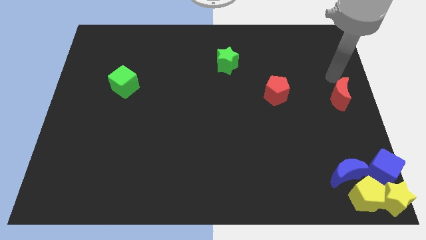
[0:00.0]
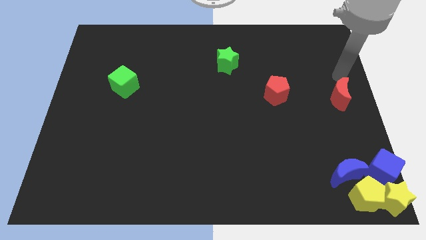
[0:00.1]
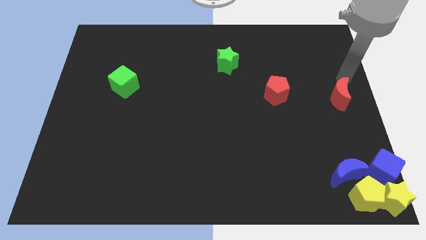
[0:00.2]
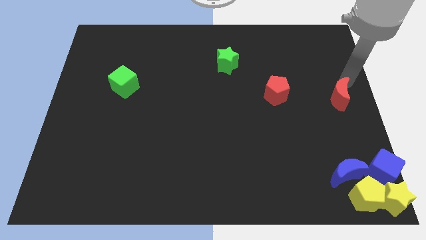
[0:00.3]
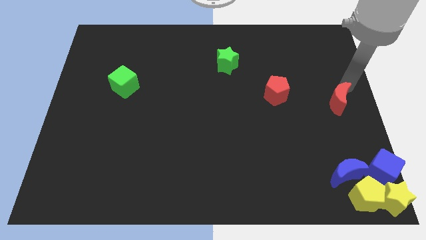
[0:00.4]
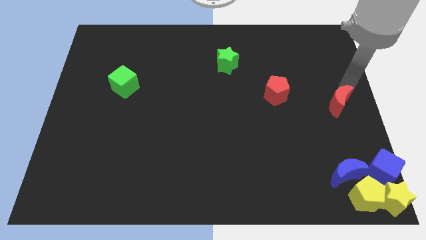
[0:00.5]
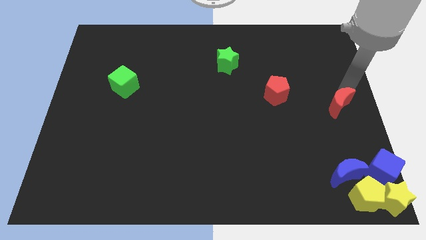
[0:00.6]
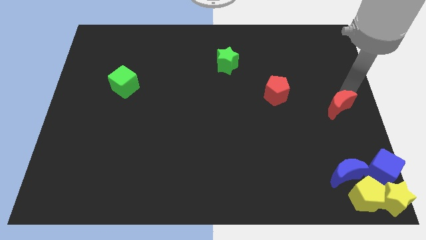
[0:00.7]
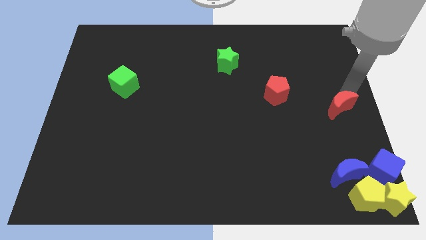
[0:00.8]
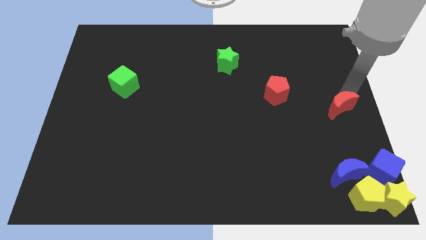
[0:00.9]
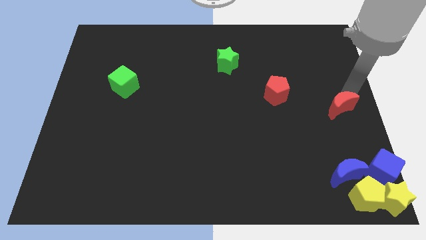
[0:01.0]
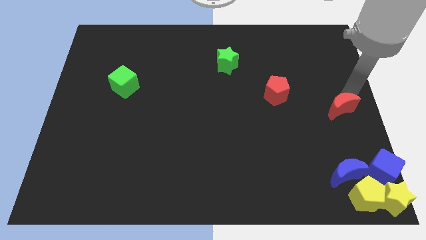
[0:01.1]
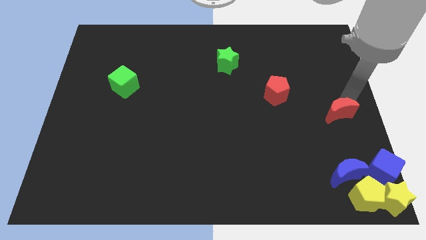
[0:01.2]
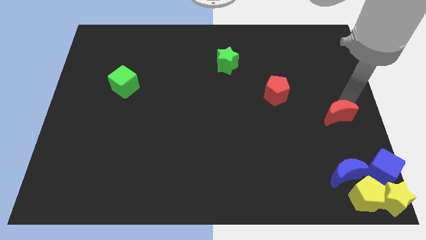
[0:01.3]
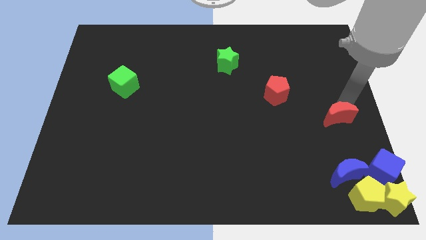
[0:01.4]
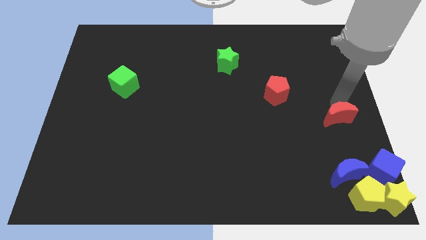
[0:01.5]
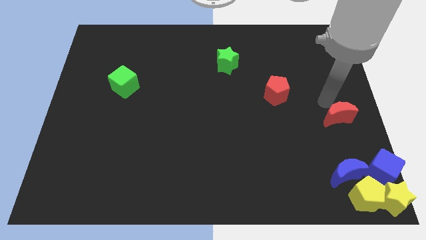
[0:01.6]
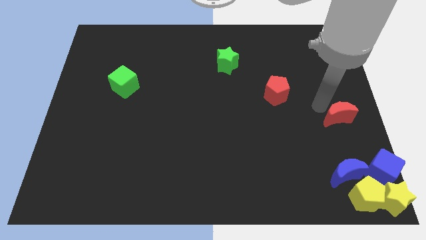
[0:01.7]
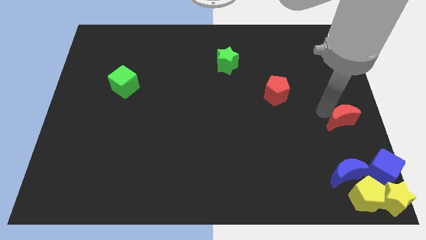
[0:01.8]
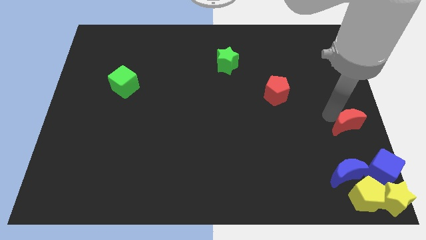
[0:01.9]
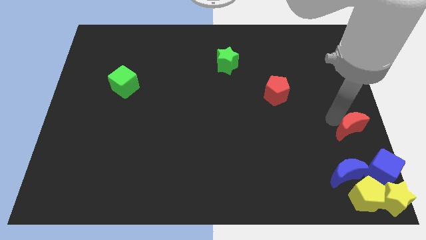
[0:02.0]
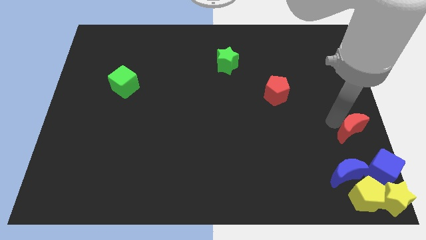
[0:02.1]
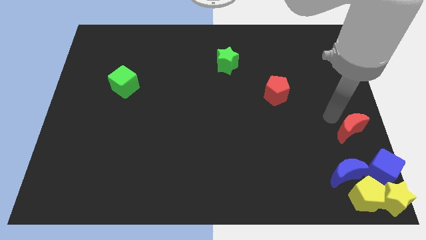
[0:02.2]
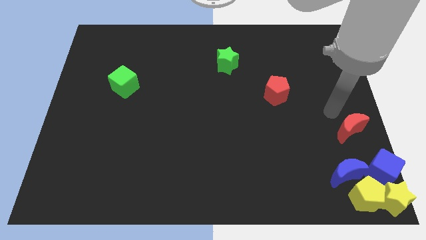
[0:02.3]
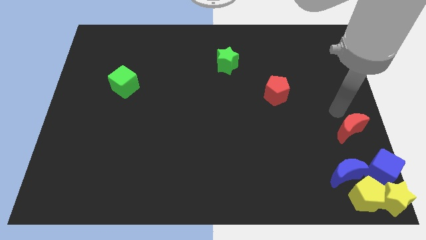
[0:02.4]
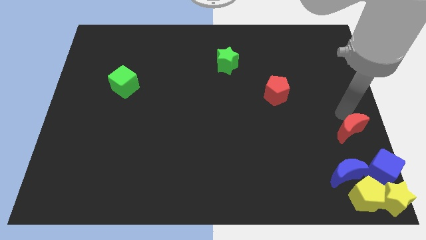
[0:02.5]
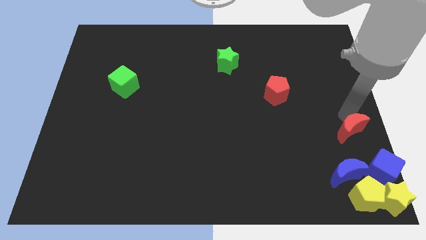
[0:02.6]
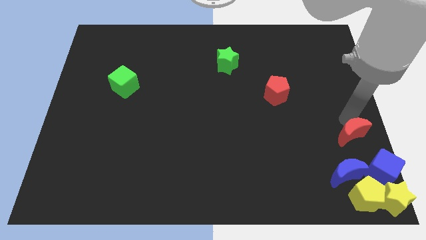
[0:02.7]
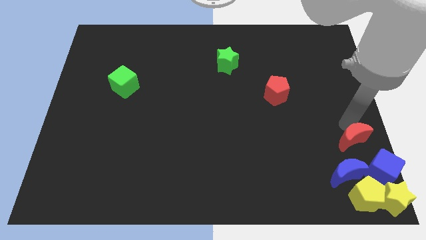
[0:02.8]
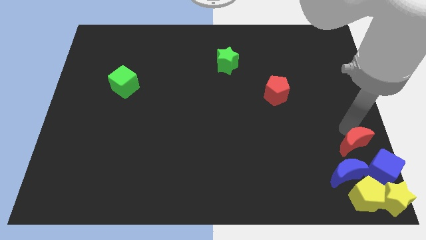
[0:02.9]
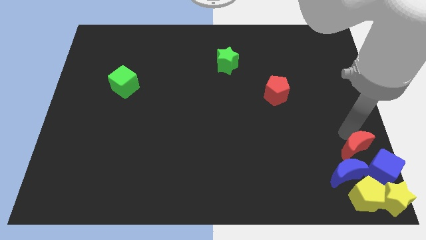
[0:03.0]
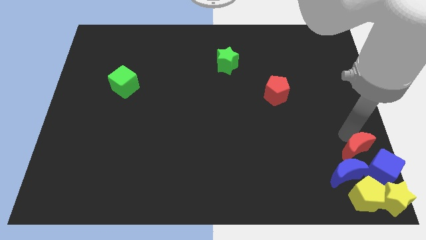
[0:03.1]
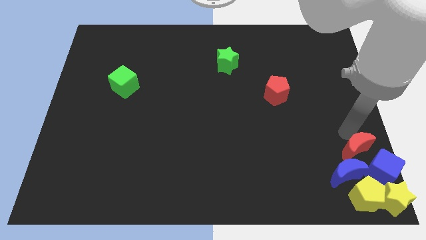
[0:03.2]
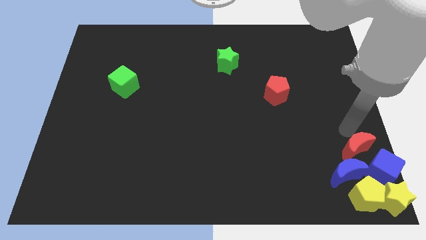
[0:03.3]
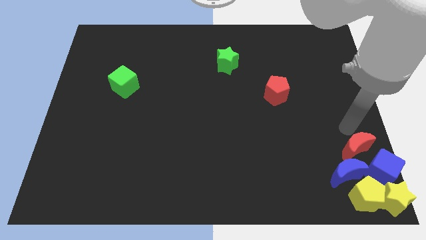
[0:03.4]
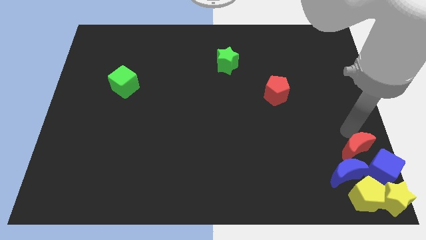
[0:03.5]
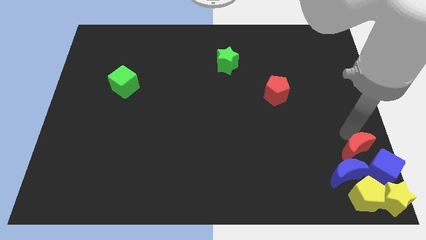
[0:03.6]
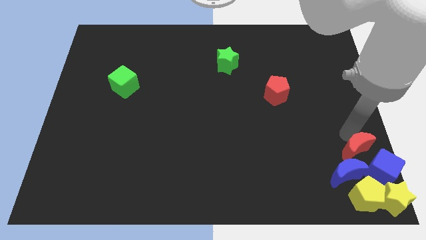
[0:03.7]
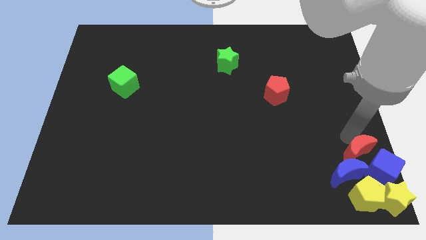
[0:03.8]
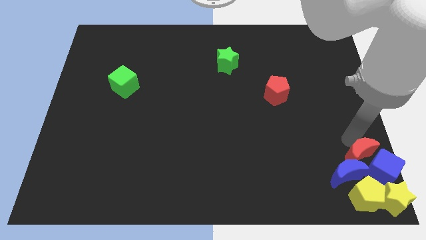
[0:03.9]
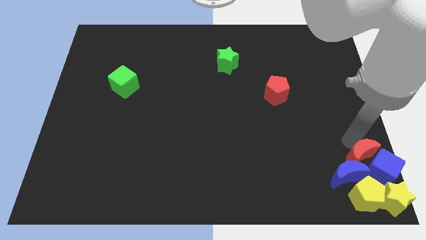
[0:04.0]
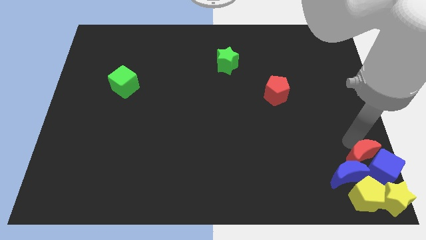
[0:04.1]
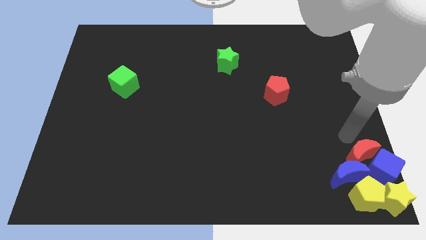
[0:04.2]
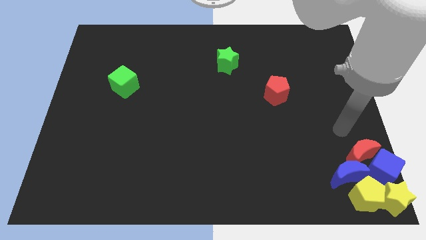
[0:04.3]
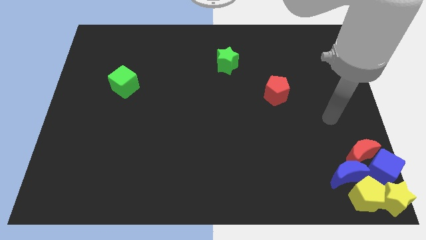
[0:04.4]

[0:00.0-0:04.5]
slide the red moon into the blue moon

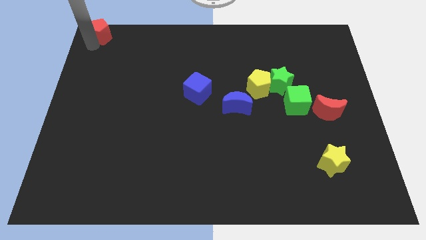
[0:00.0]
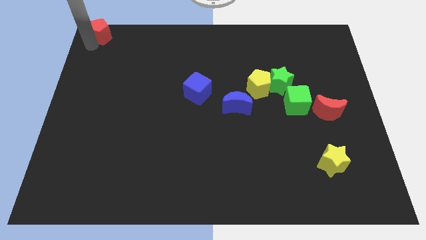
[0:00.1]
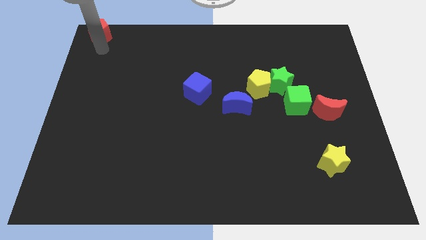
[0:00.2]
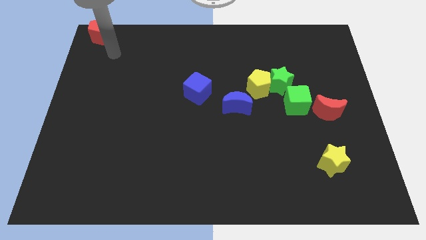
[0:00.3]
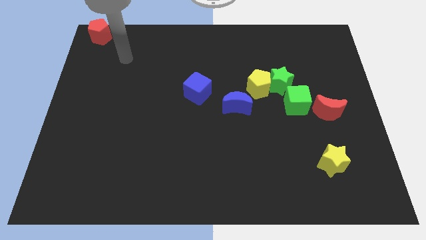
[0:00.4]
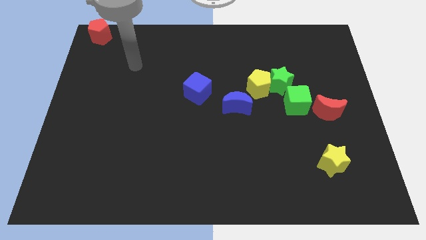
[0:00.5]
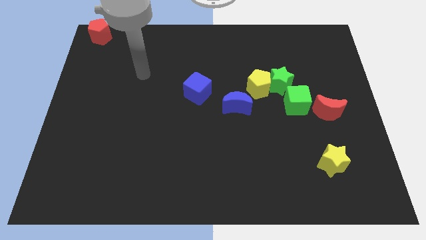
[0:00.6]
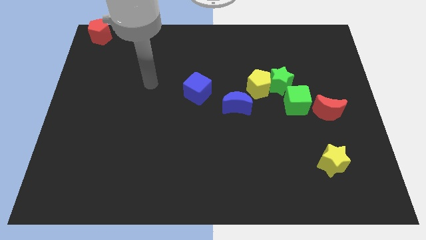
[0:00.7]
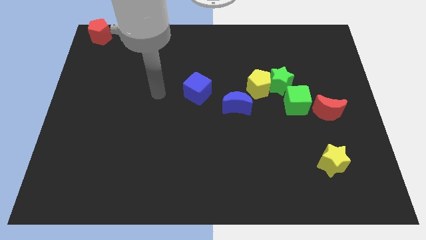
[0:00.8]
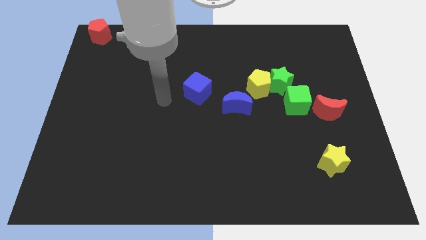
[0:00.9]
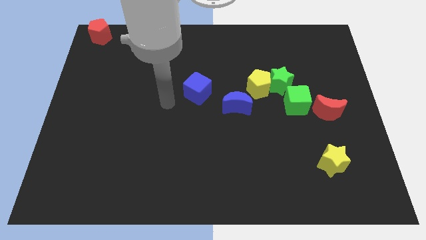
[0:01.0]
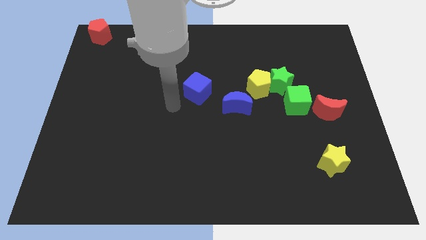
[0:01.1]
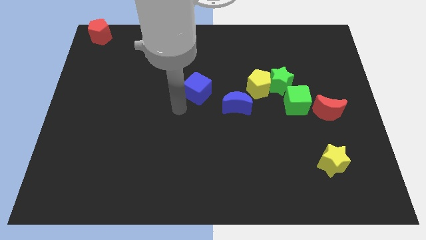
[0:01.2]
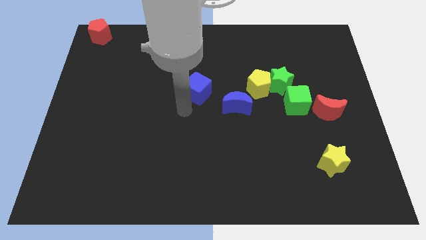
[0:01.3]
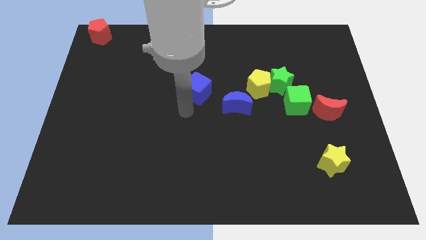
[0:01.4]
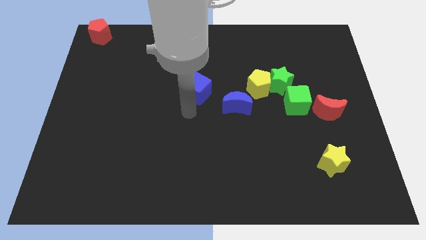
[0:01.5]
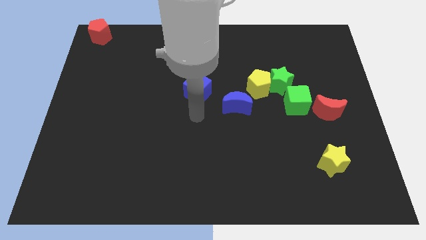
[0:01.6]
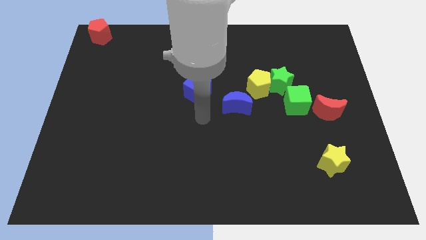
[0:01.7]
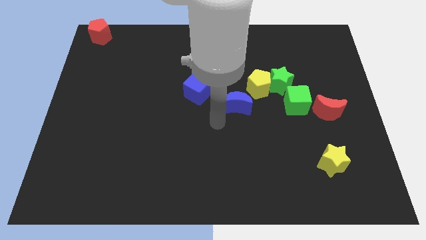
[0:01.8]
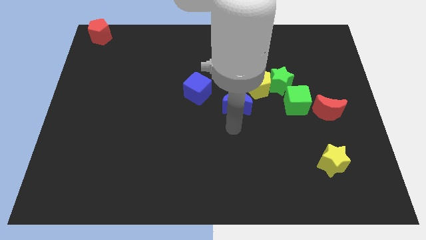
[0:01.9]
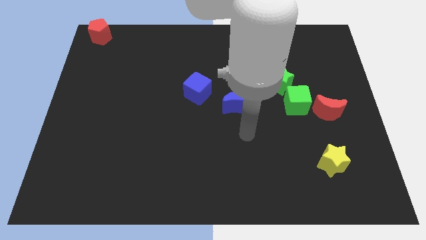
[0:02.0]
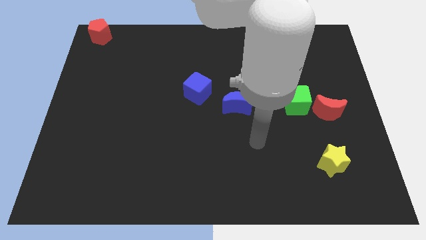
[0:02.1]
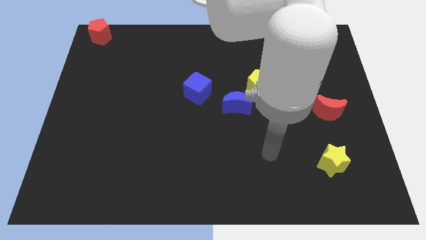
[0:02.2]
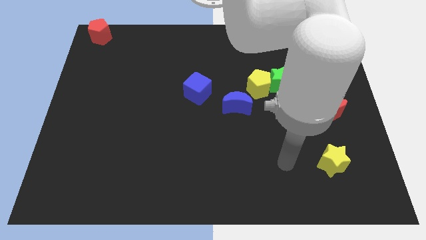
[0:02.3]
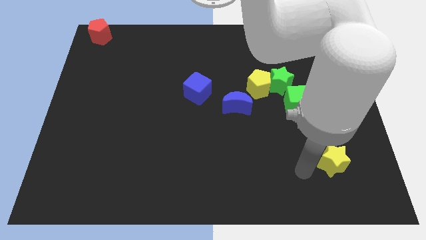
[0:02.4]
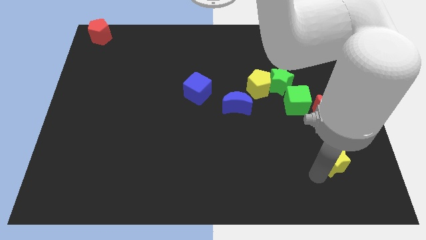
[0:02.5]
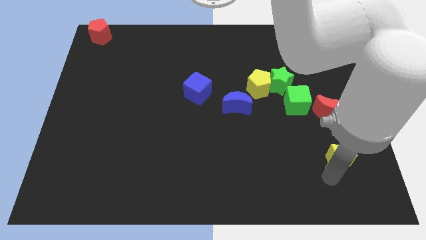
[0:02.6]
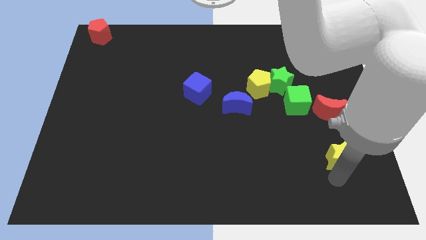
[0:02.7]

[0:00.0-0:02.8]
move your arm away from the red pentagon

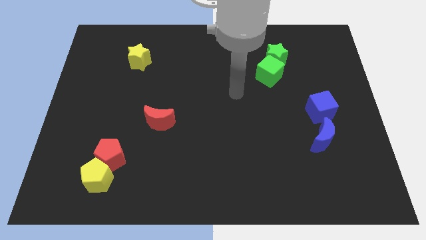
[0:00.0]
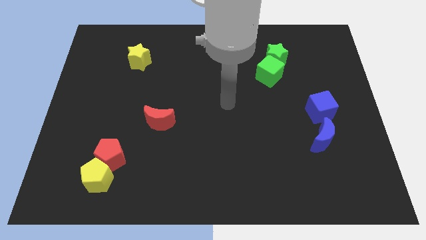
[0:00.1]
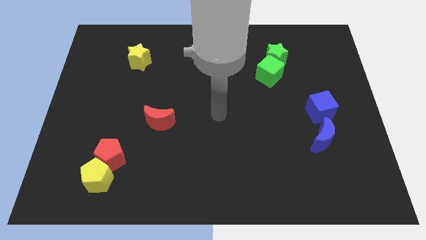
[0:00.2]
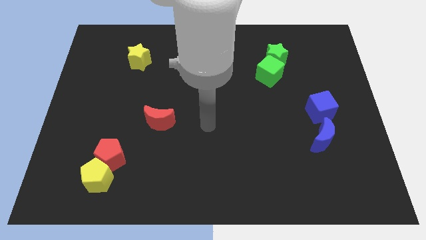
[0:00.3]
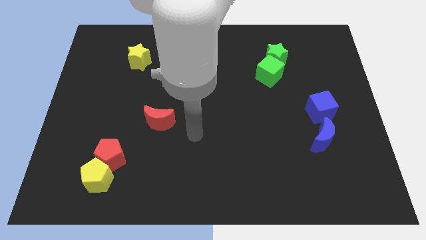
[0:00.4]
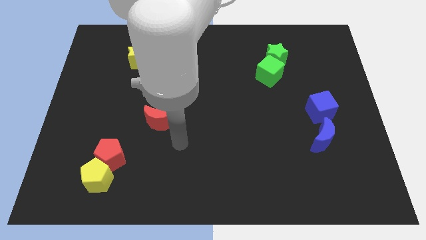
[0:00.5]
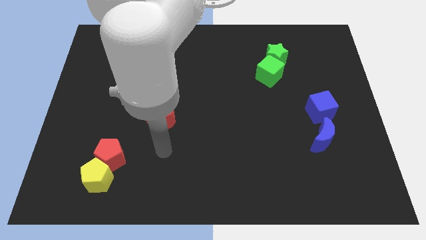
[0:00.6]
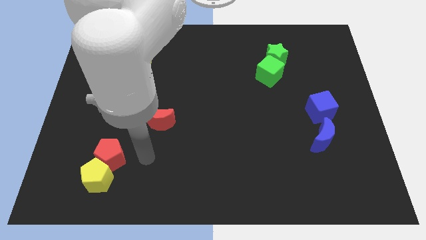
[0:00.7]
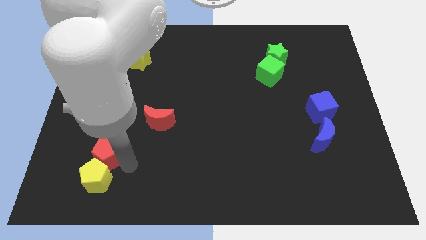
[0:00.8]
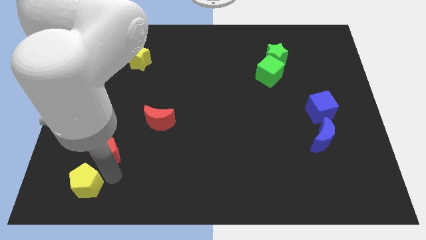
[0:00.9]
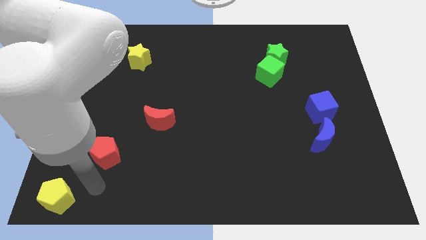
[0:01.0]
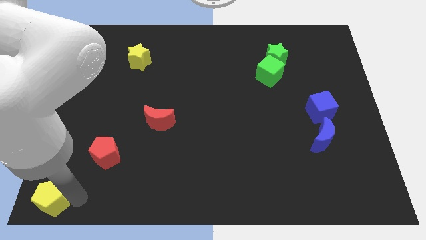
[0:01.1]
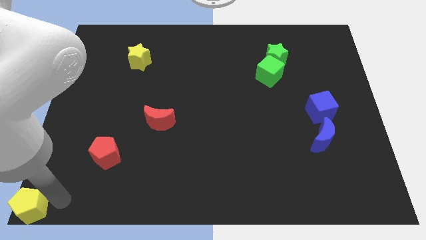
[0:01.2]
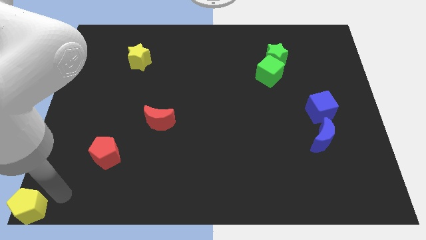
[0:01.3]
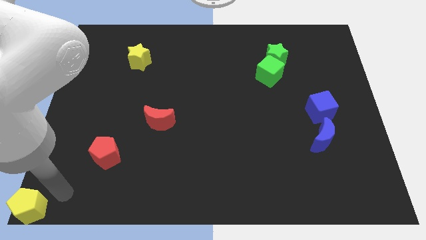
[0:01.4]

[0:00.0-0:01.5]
push the yellow pentagon to the bottom left corner

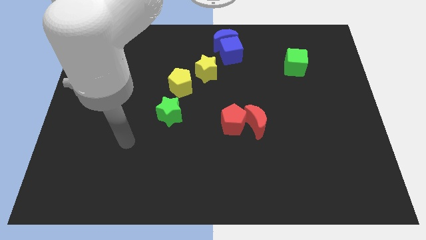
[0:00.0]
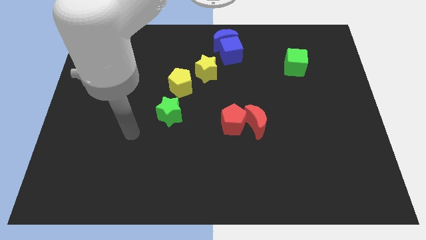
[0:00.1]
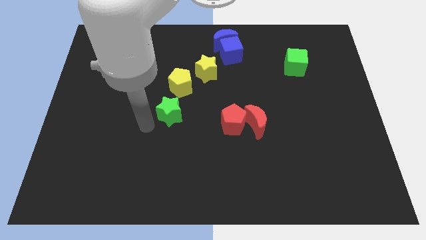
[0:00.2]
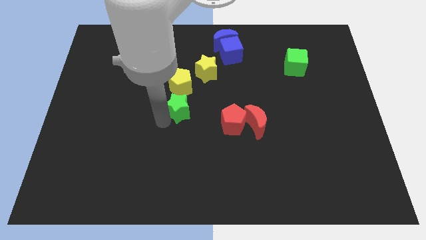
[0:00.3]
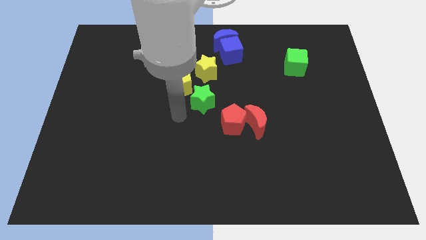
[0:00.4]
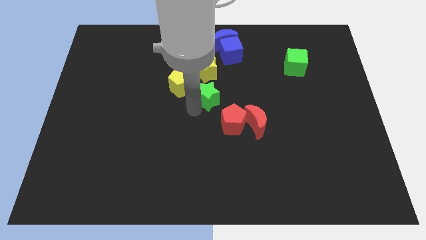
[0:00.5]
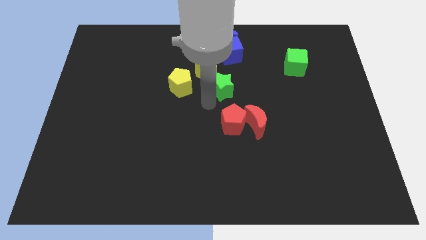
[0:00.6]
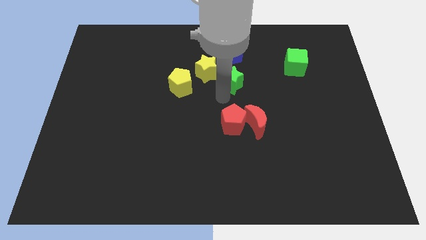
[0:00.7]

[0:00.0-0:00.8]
move the green star above the red pentagon
